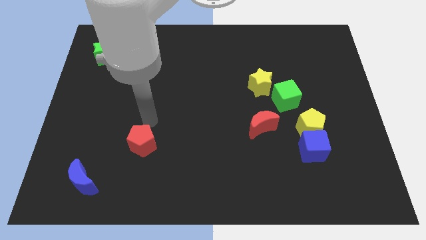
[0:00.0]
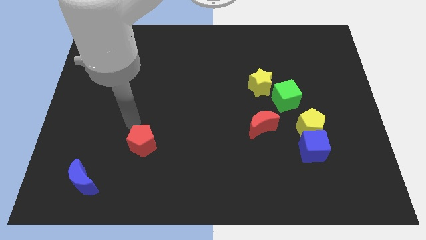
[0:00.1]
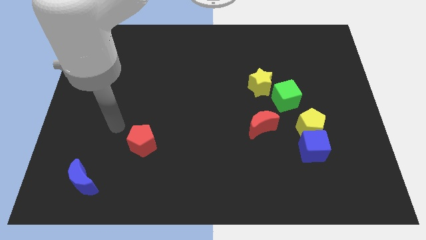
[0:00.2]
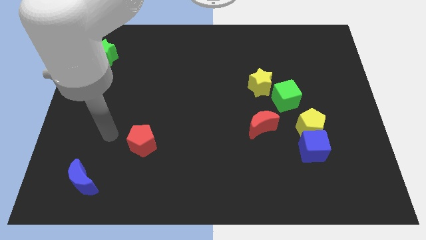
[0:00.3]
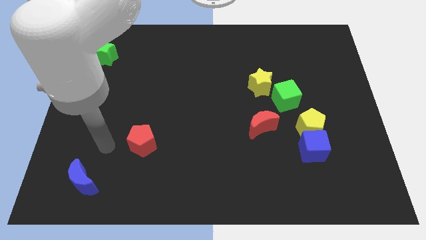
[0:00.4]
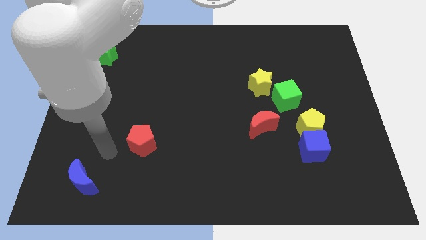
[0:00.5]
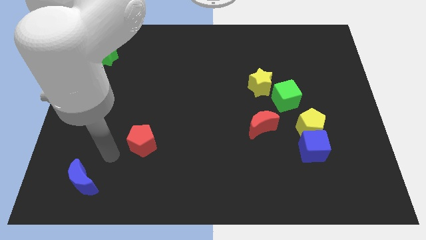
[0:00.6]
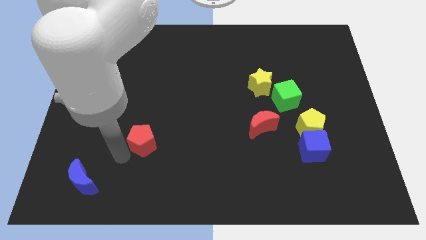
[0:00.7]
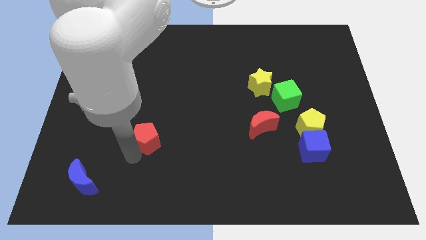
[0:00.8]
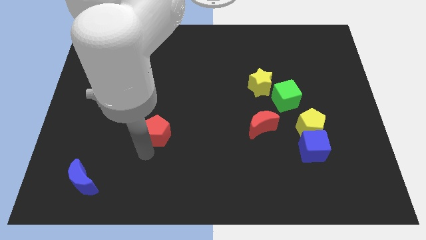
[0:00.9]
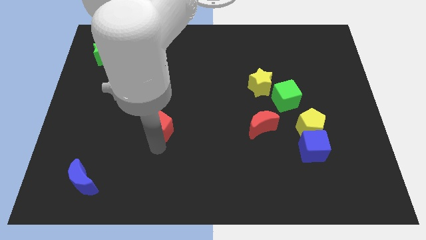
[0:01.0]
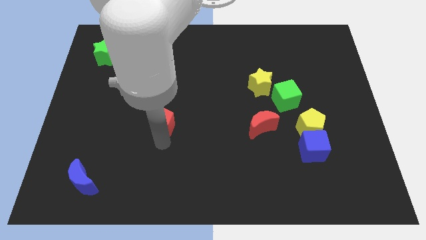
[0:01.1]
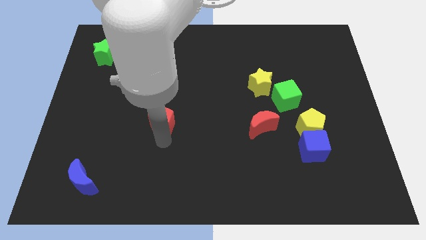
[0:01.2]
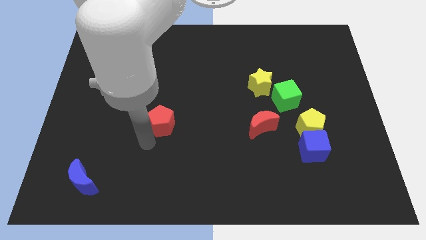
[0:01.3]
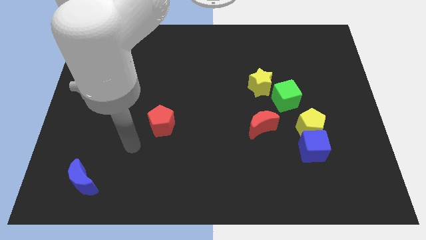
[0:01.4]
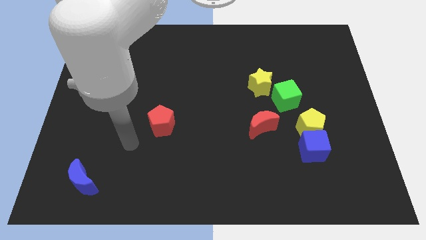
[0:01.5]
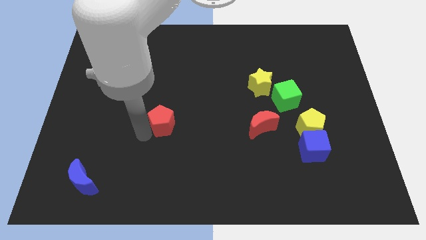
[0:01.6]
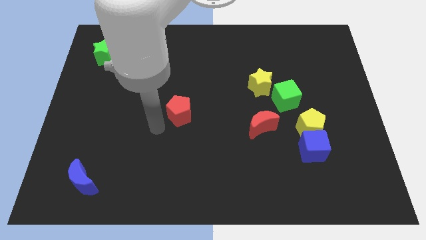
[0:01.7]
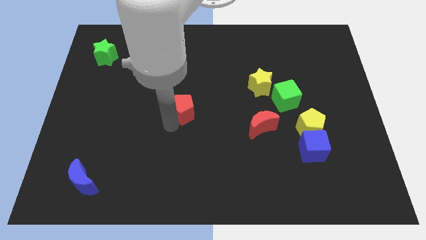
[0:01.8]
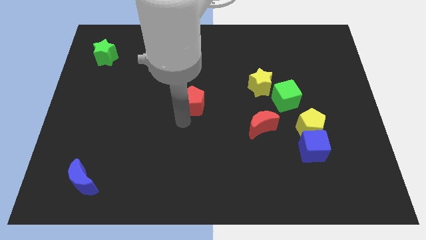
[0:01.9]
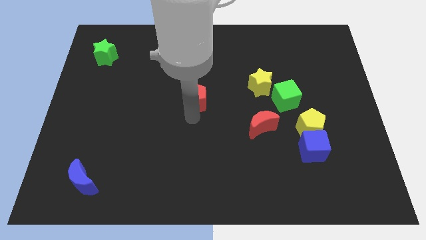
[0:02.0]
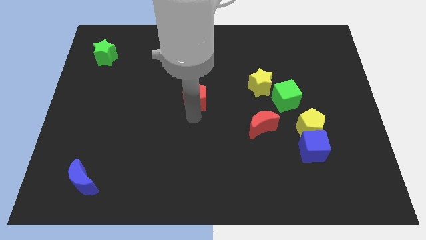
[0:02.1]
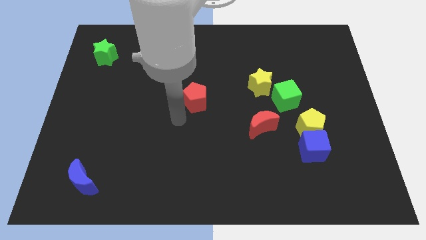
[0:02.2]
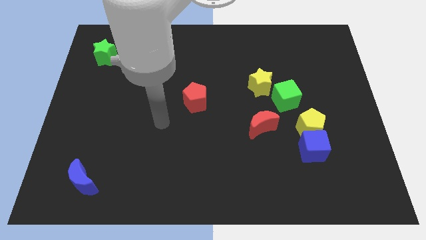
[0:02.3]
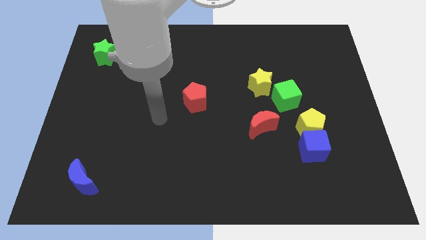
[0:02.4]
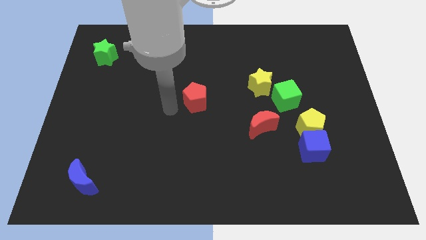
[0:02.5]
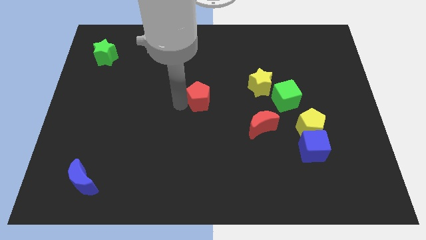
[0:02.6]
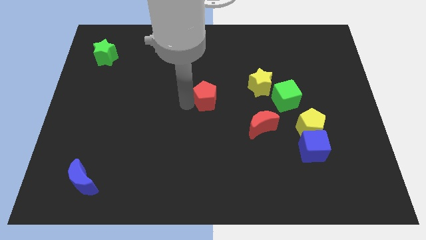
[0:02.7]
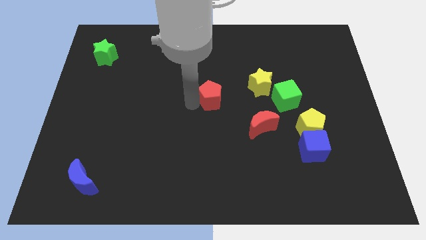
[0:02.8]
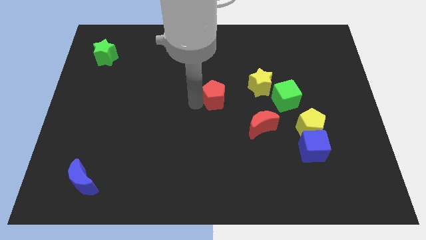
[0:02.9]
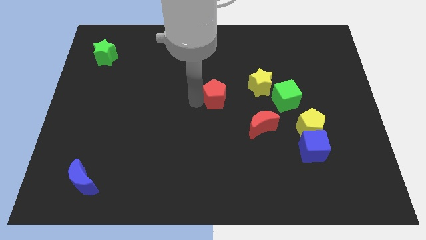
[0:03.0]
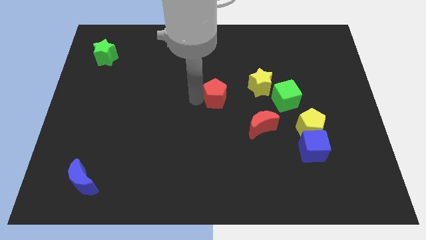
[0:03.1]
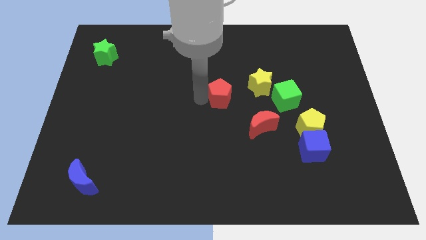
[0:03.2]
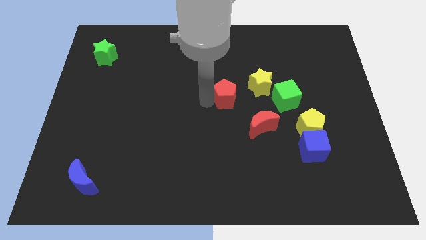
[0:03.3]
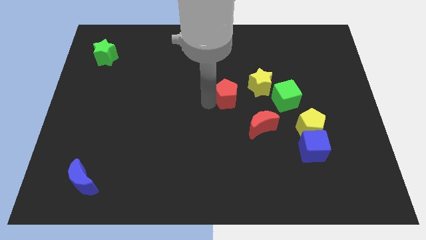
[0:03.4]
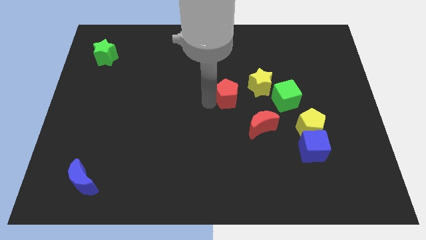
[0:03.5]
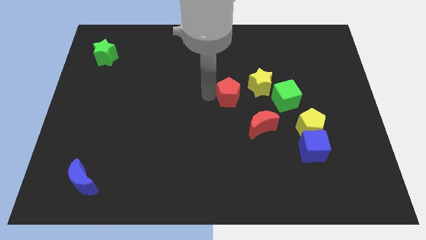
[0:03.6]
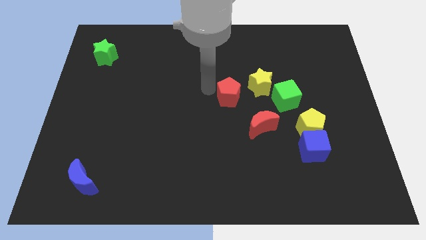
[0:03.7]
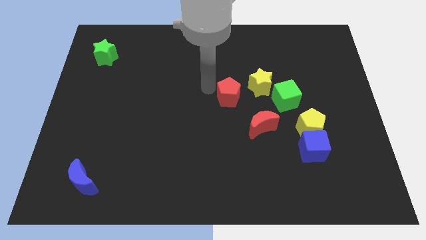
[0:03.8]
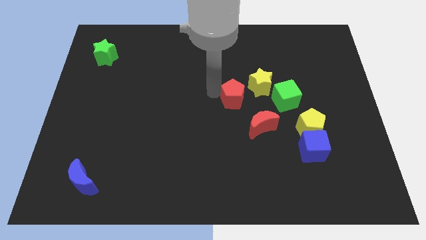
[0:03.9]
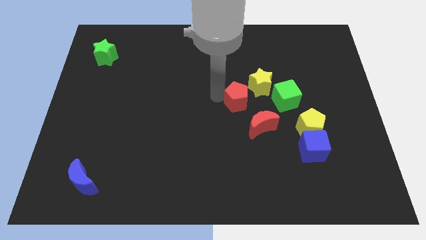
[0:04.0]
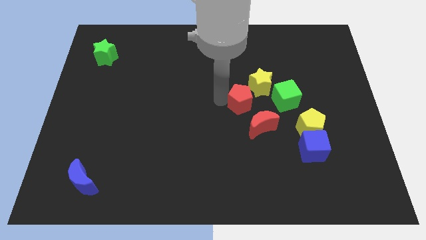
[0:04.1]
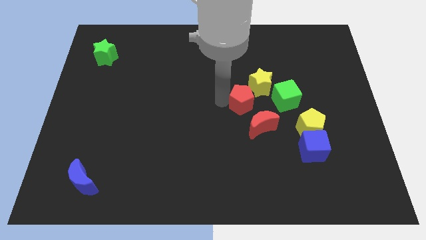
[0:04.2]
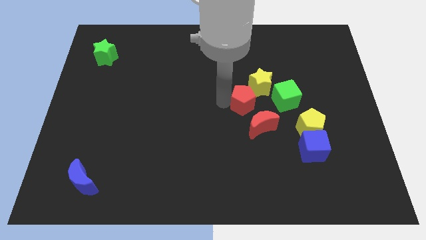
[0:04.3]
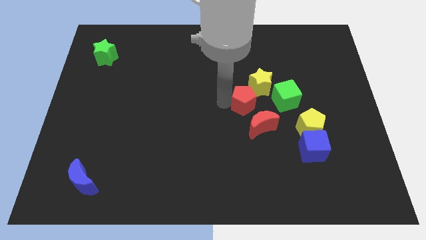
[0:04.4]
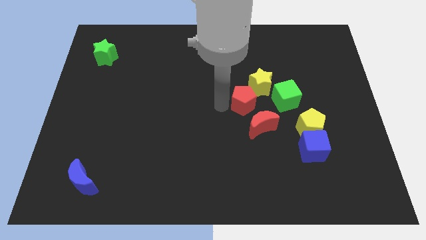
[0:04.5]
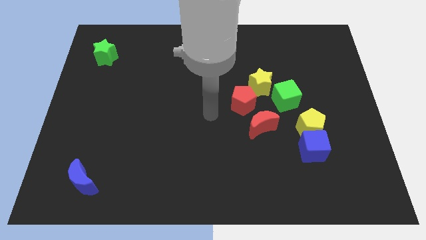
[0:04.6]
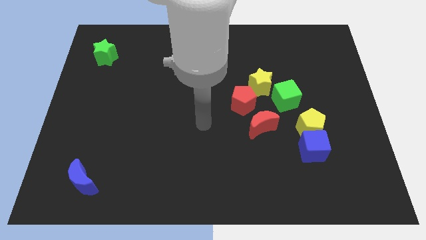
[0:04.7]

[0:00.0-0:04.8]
drag the red pentagon diagonally bottom left to yellow star

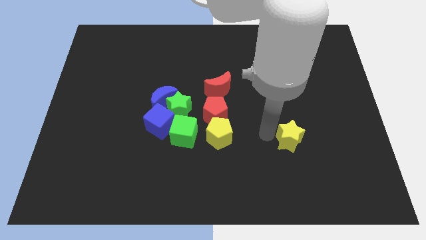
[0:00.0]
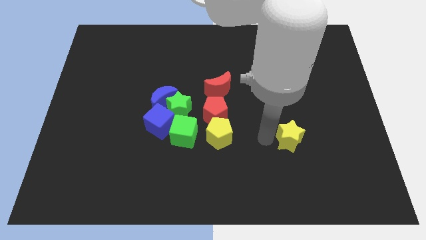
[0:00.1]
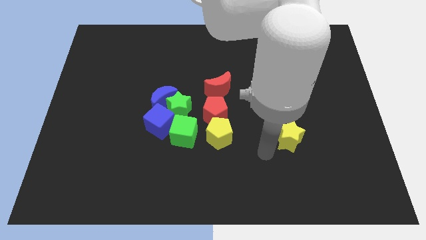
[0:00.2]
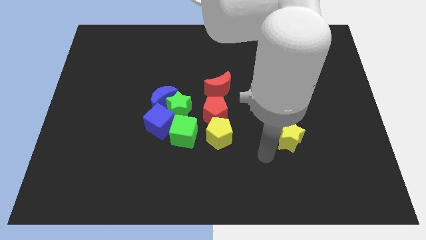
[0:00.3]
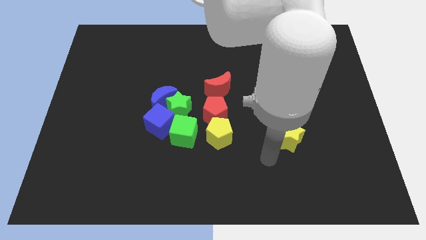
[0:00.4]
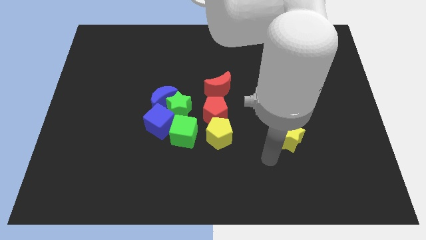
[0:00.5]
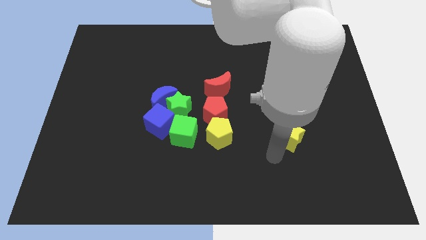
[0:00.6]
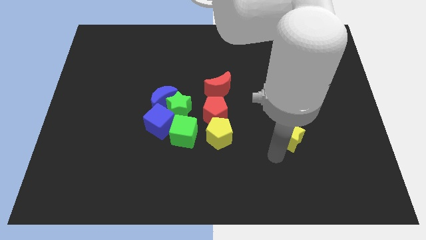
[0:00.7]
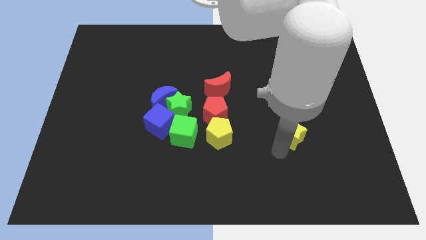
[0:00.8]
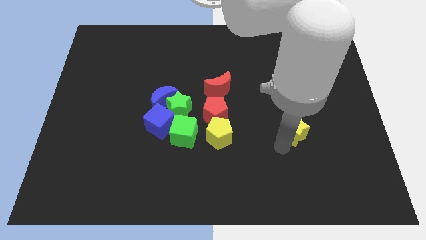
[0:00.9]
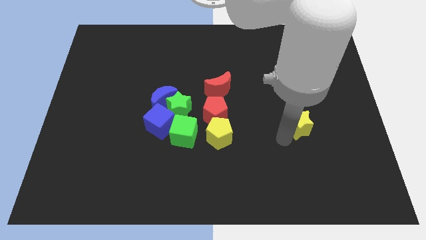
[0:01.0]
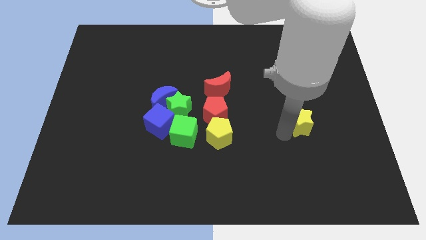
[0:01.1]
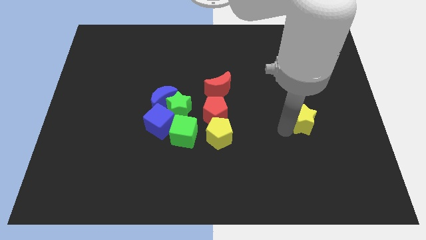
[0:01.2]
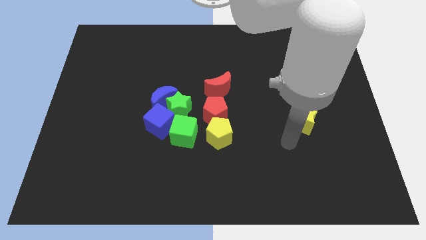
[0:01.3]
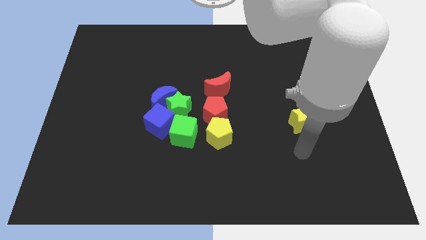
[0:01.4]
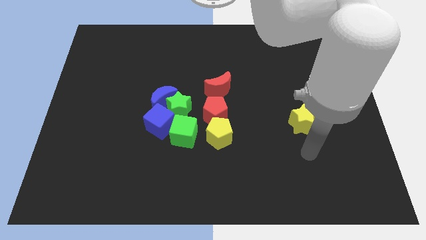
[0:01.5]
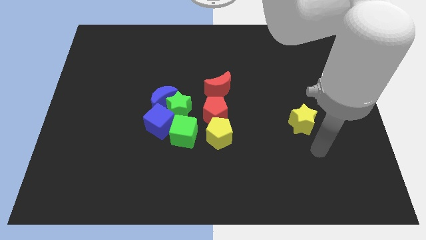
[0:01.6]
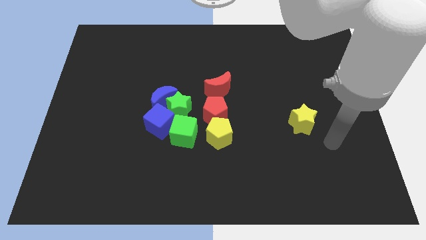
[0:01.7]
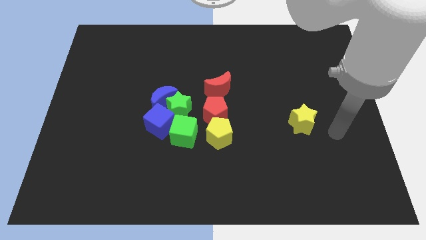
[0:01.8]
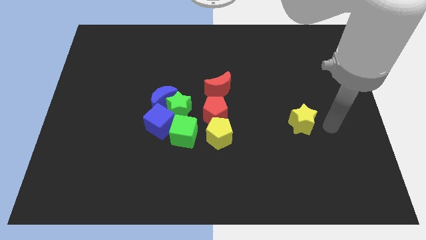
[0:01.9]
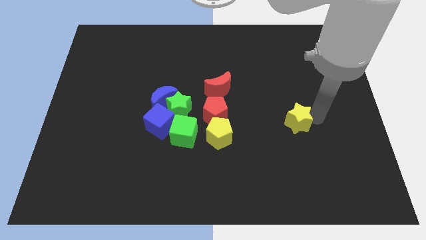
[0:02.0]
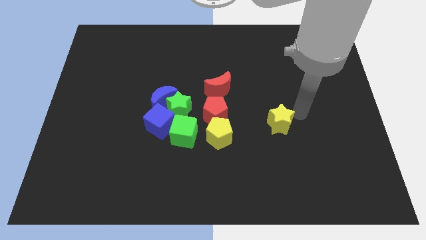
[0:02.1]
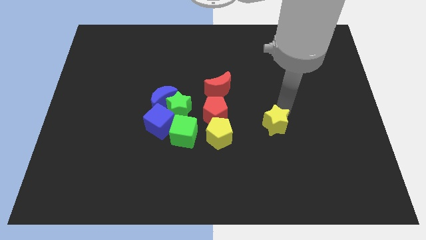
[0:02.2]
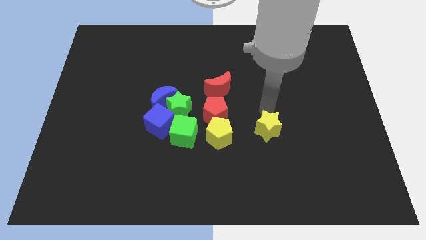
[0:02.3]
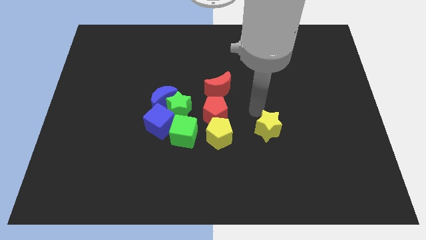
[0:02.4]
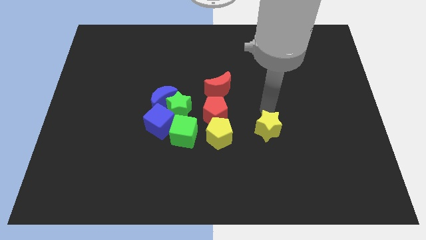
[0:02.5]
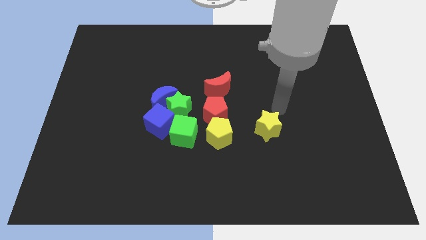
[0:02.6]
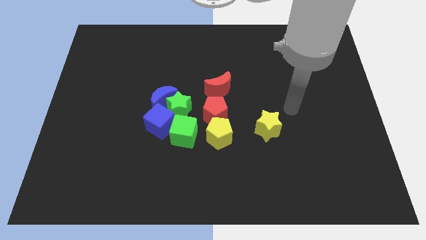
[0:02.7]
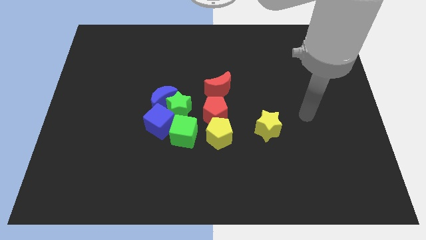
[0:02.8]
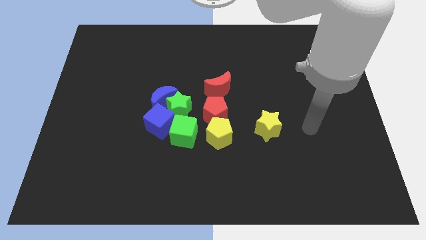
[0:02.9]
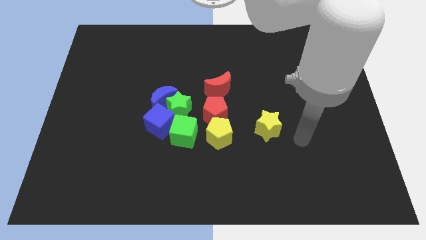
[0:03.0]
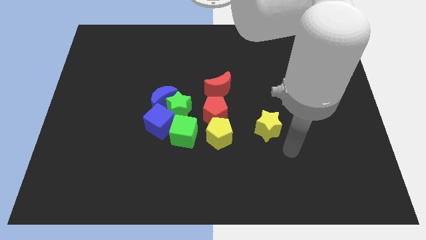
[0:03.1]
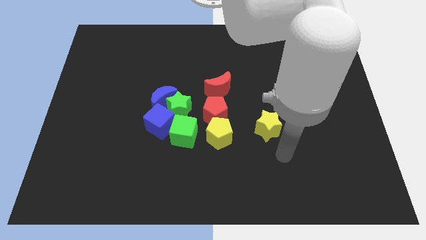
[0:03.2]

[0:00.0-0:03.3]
move the yellow star towards the yellow pentagon

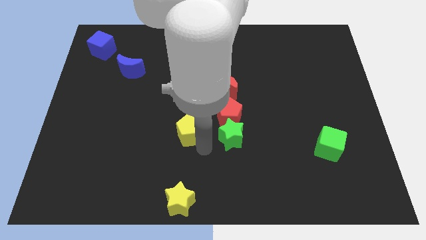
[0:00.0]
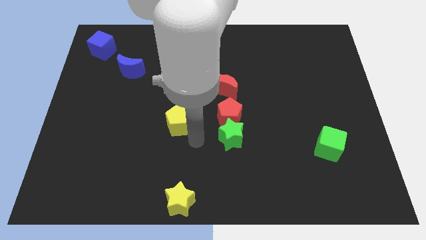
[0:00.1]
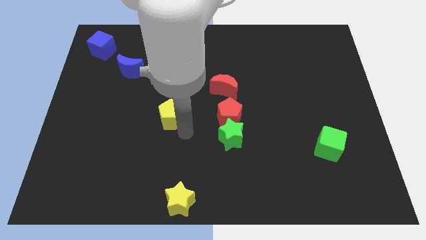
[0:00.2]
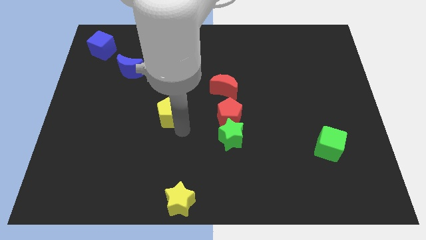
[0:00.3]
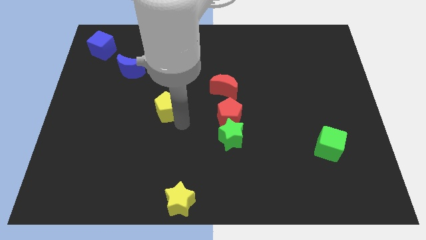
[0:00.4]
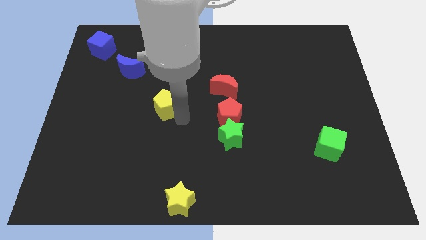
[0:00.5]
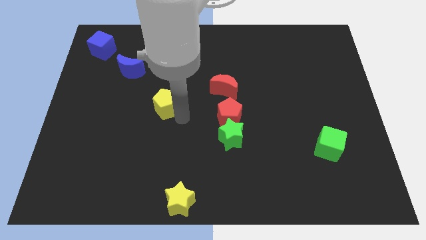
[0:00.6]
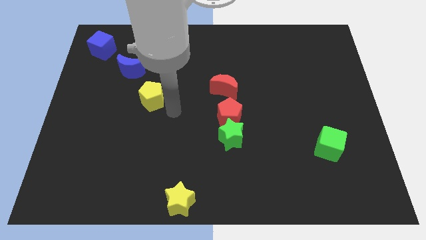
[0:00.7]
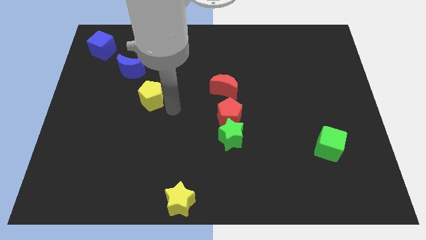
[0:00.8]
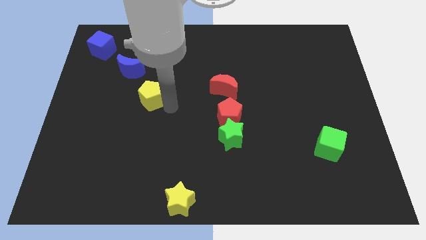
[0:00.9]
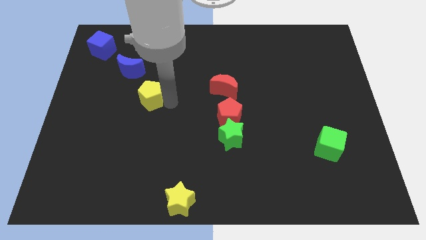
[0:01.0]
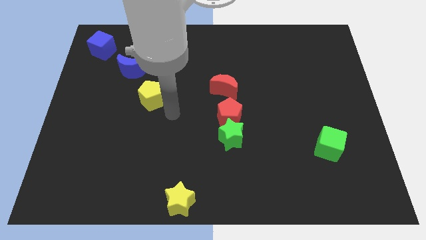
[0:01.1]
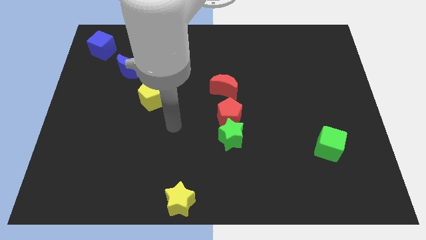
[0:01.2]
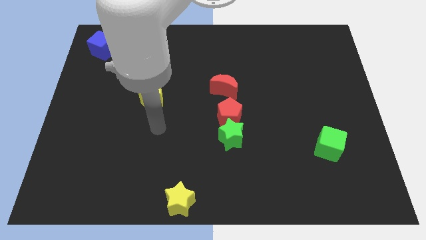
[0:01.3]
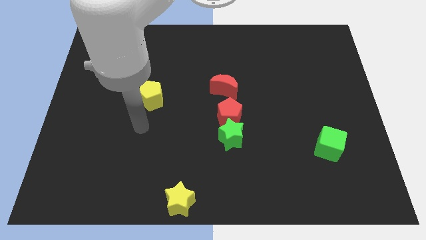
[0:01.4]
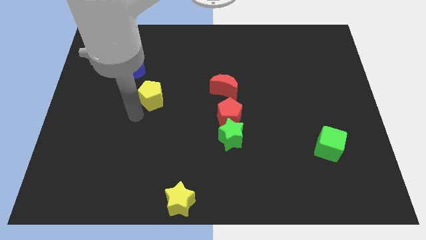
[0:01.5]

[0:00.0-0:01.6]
push the yellow pentagon towards the bottom right of the blue crescent
